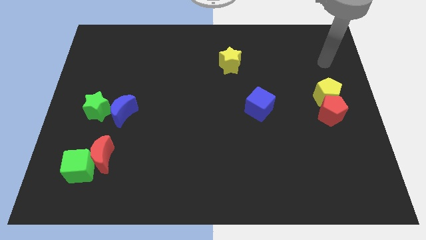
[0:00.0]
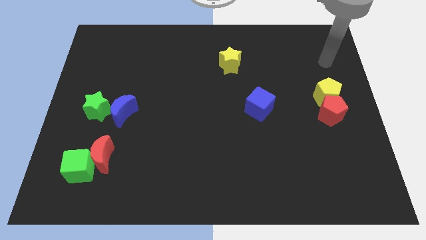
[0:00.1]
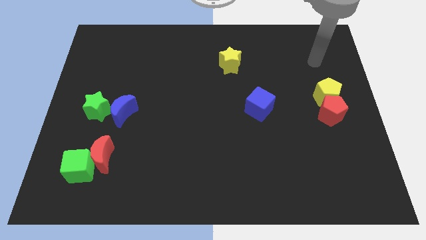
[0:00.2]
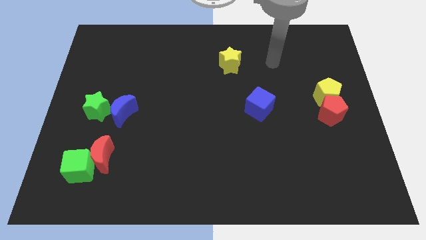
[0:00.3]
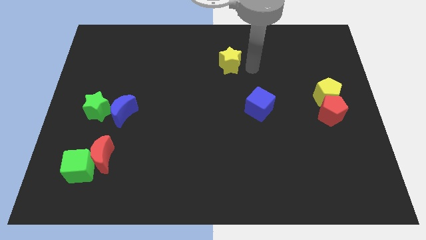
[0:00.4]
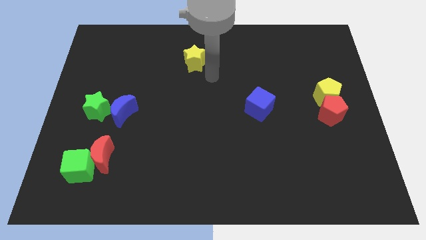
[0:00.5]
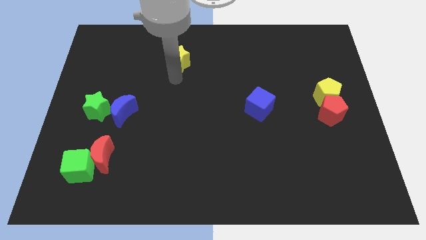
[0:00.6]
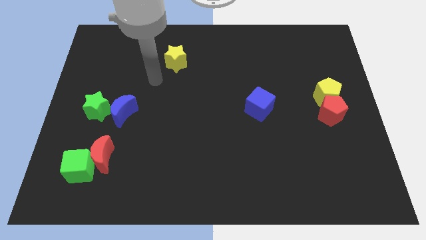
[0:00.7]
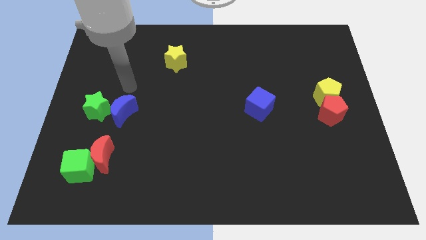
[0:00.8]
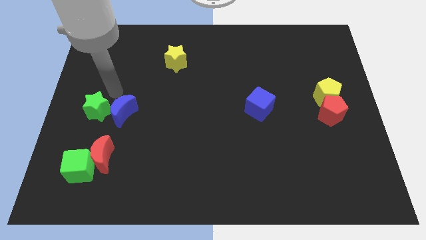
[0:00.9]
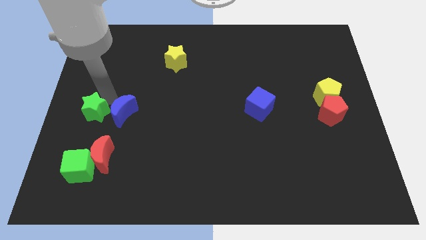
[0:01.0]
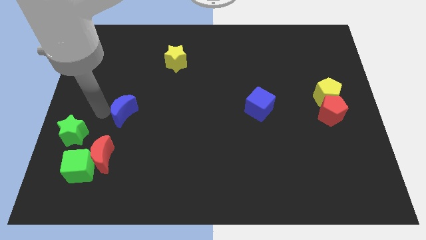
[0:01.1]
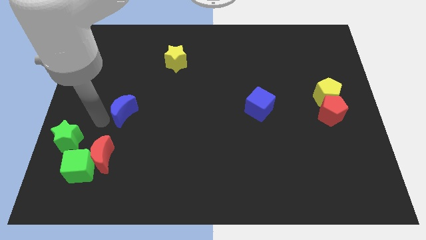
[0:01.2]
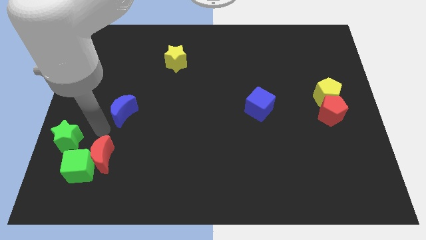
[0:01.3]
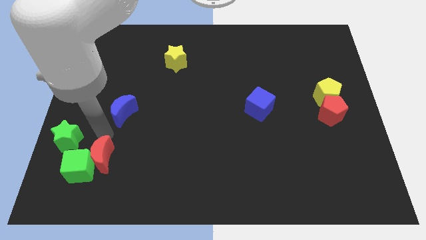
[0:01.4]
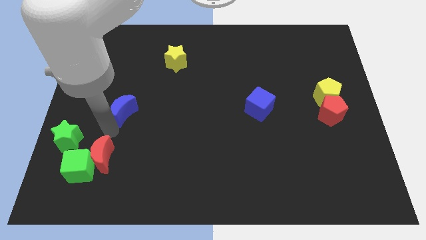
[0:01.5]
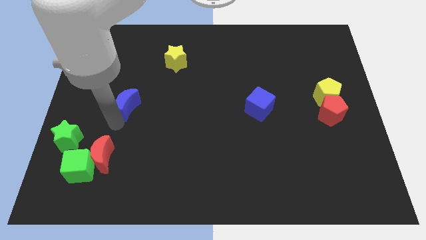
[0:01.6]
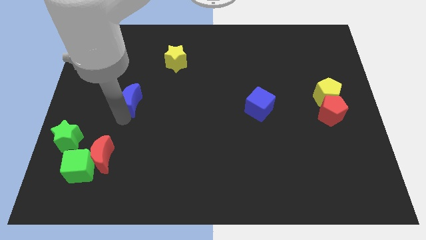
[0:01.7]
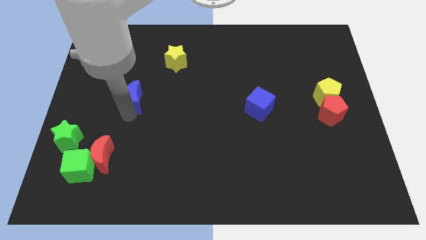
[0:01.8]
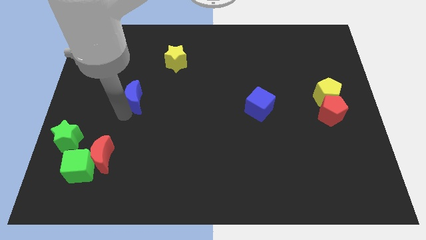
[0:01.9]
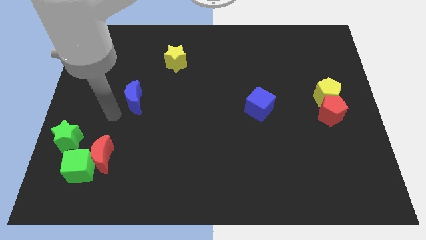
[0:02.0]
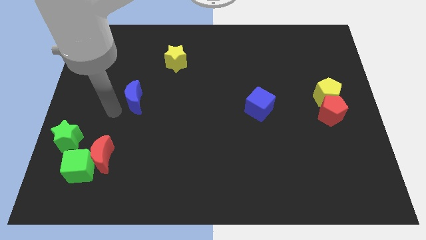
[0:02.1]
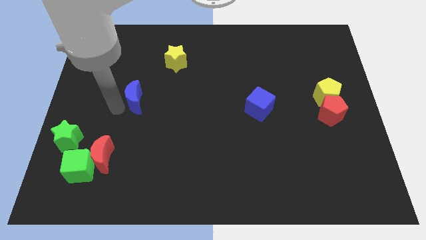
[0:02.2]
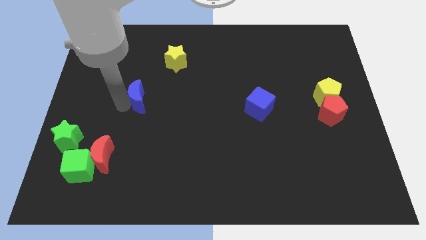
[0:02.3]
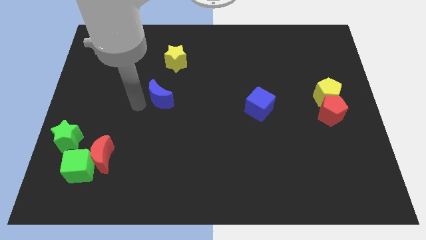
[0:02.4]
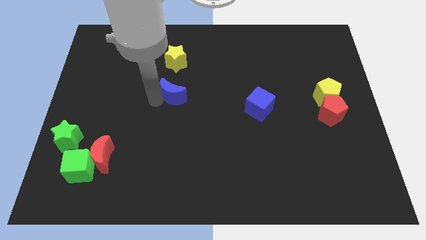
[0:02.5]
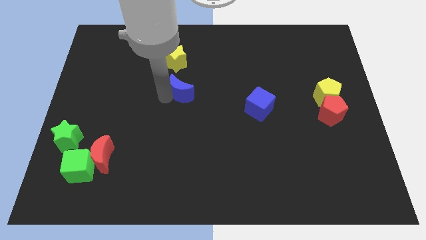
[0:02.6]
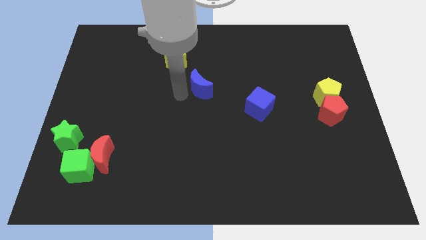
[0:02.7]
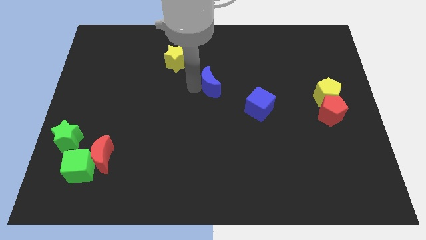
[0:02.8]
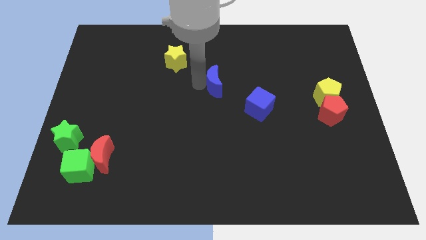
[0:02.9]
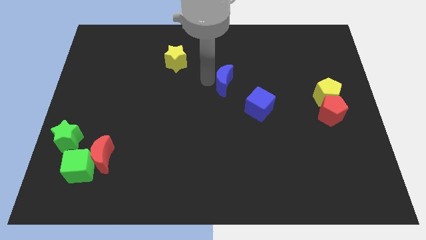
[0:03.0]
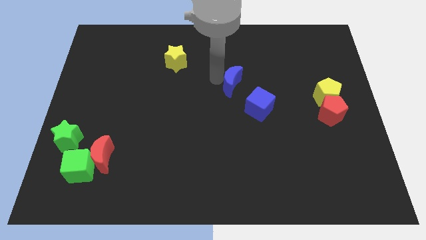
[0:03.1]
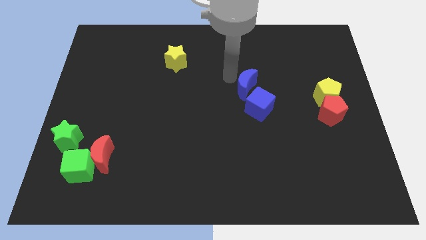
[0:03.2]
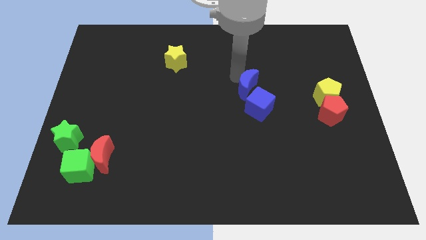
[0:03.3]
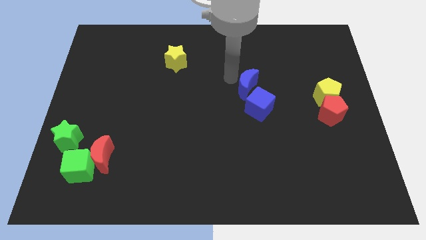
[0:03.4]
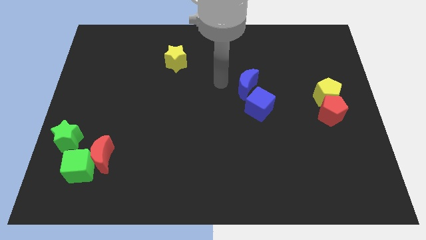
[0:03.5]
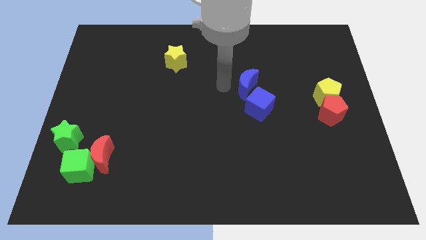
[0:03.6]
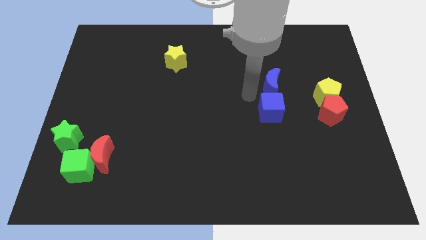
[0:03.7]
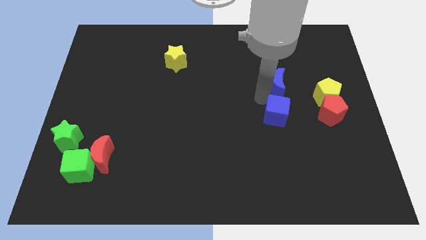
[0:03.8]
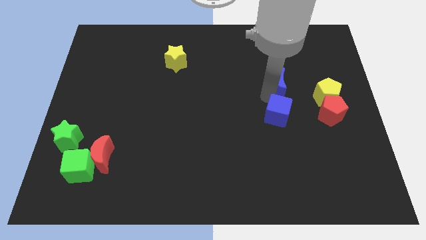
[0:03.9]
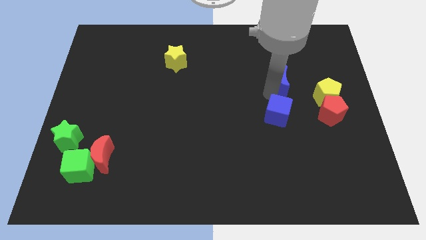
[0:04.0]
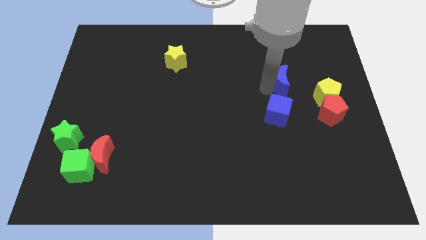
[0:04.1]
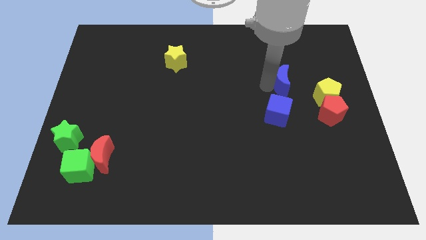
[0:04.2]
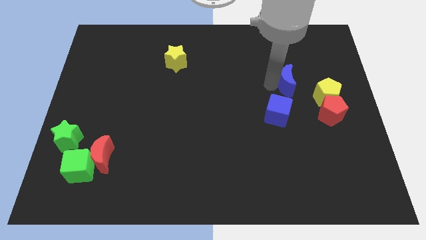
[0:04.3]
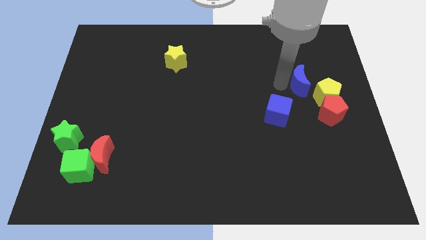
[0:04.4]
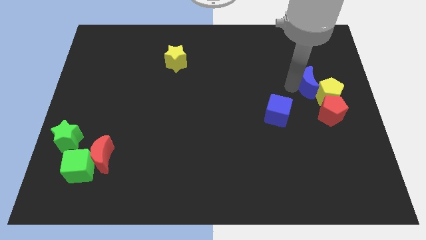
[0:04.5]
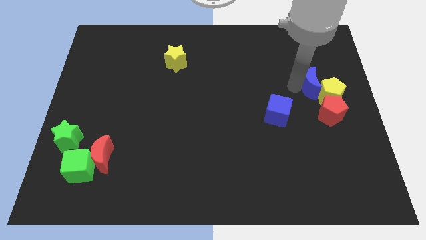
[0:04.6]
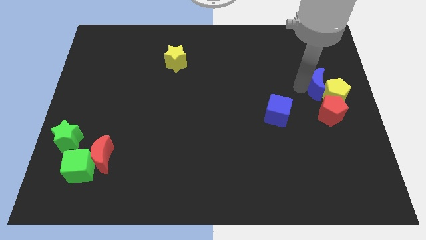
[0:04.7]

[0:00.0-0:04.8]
push the blue moon next to the yellow pentagon

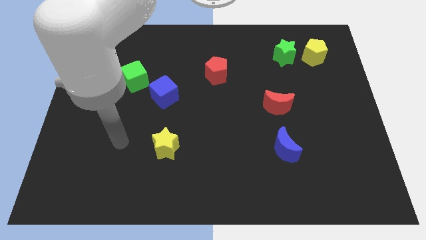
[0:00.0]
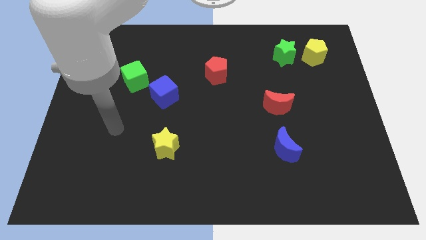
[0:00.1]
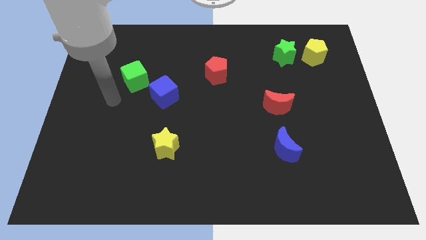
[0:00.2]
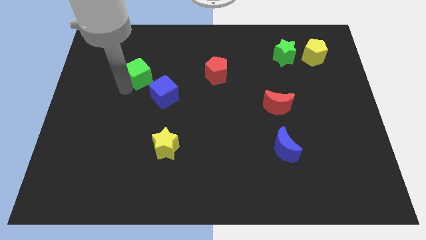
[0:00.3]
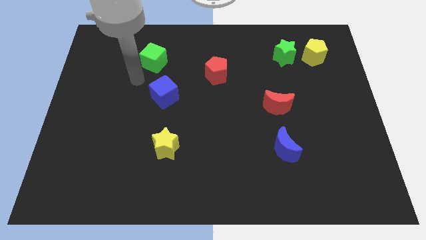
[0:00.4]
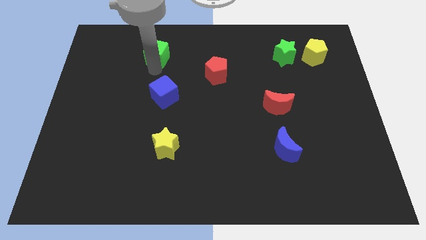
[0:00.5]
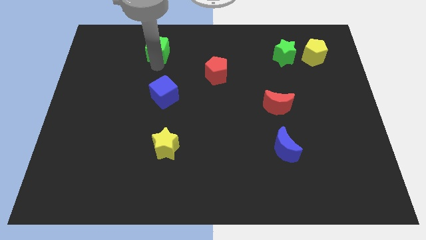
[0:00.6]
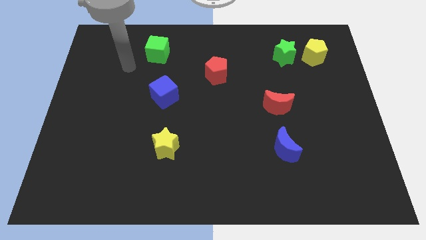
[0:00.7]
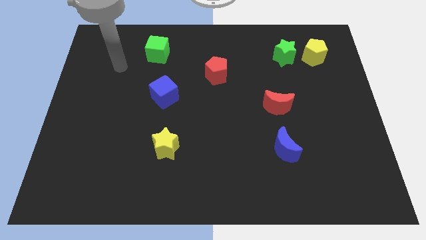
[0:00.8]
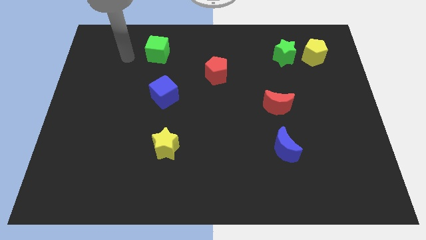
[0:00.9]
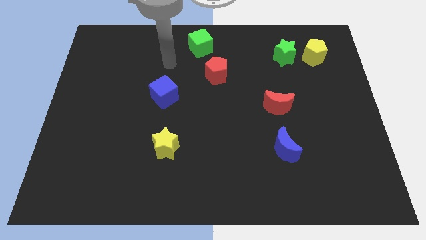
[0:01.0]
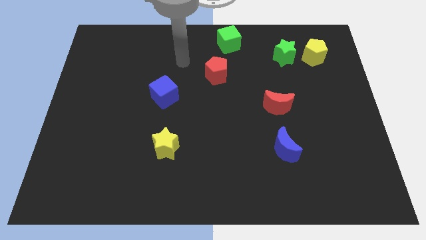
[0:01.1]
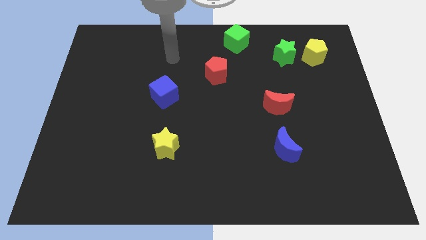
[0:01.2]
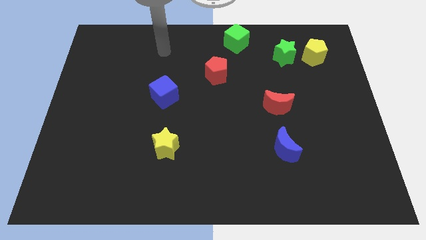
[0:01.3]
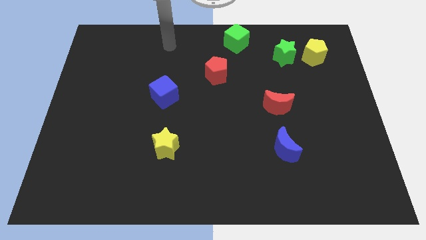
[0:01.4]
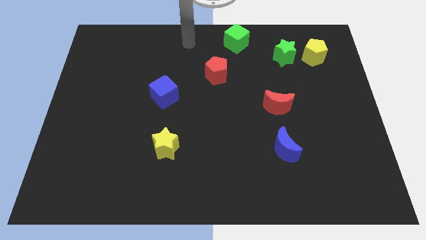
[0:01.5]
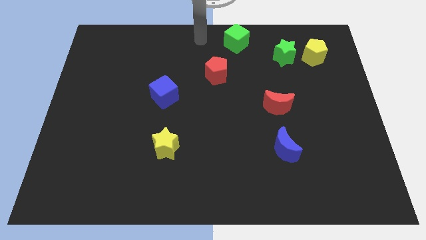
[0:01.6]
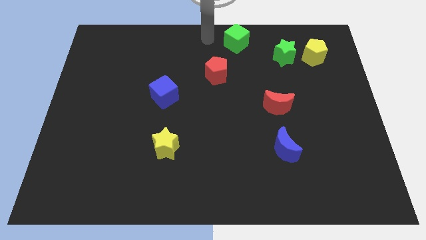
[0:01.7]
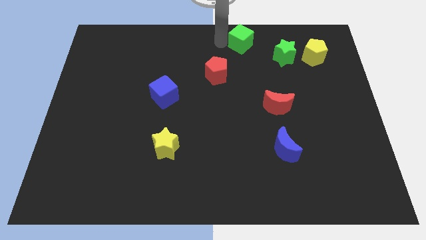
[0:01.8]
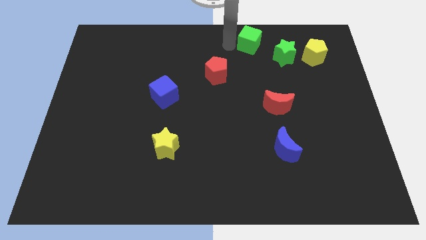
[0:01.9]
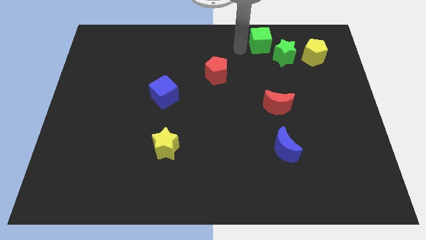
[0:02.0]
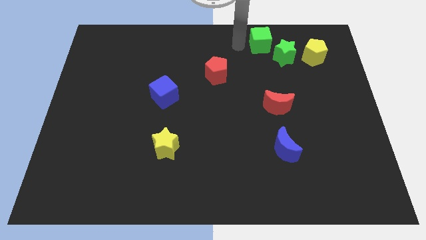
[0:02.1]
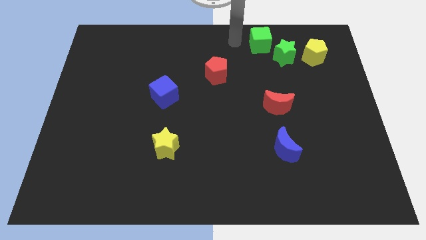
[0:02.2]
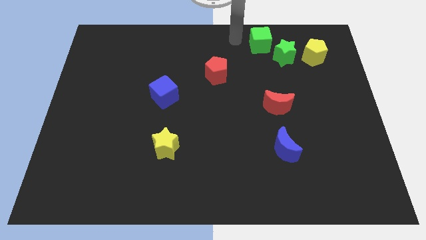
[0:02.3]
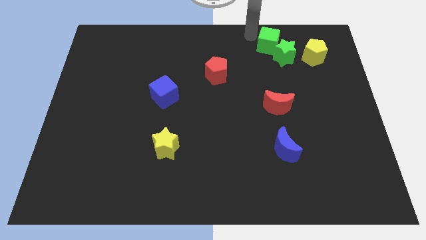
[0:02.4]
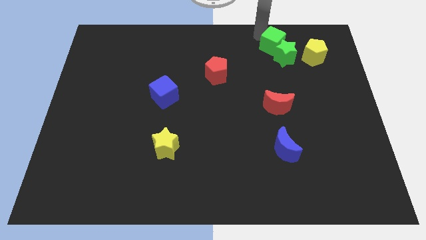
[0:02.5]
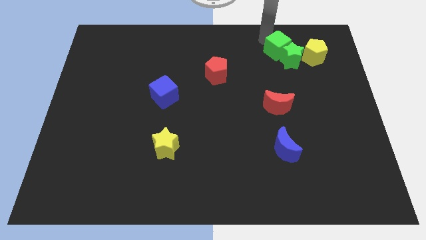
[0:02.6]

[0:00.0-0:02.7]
move the green cube close to the green star

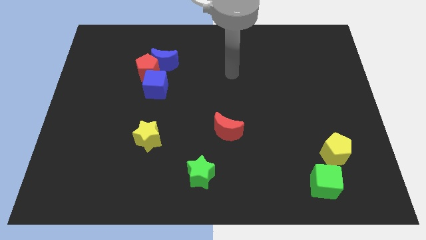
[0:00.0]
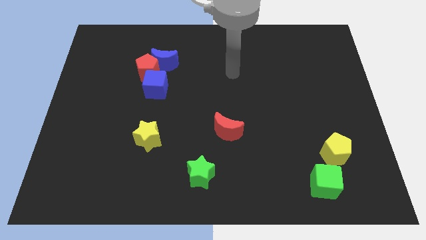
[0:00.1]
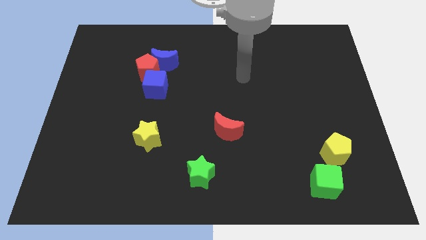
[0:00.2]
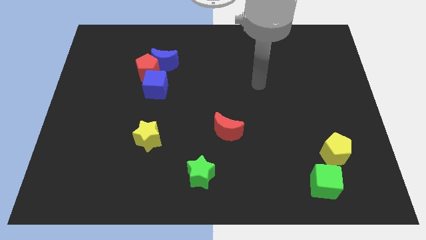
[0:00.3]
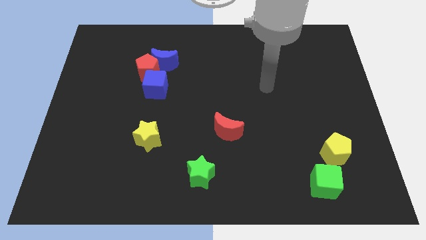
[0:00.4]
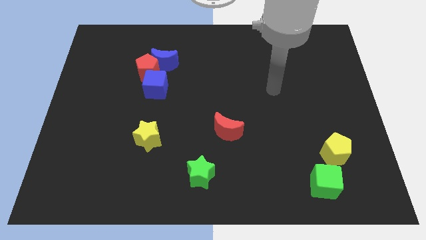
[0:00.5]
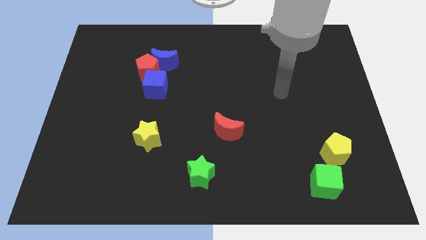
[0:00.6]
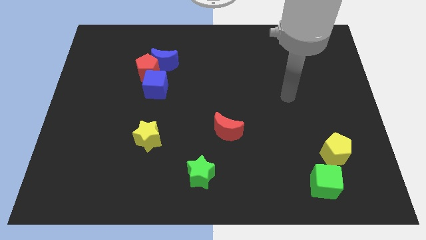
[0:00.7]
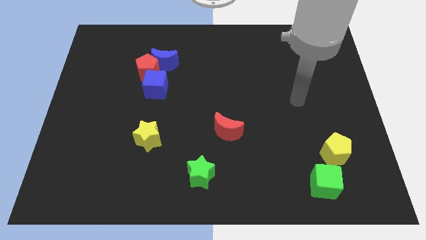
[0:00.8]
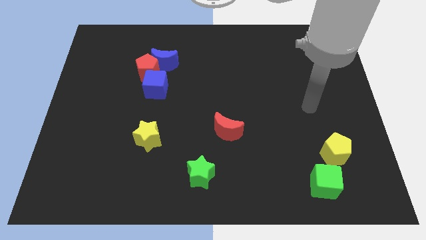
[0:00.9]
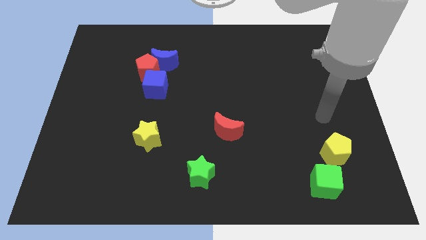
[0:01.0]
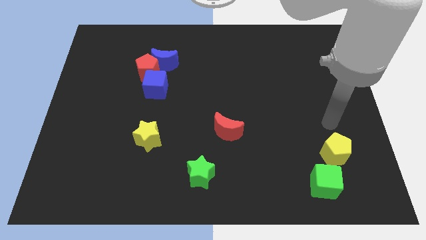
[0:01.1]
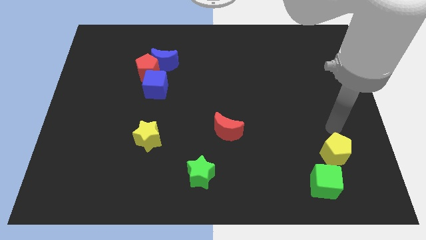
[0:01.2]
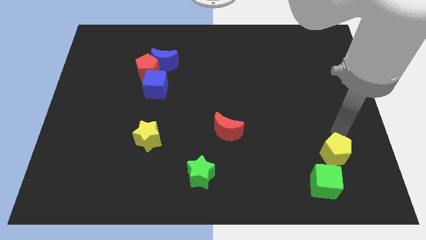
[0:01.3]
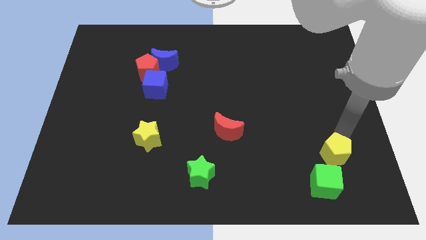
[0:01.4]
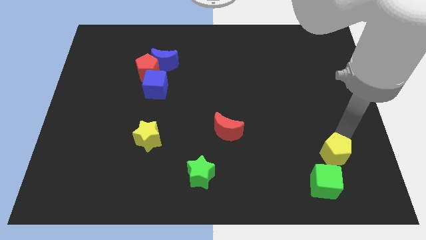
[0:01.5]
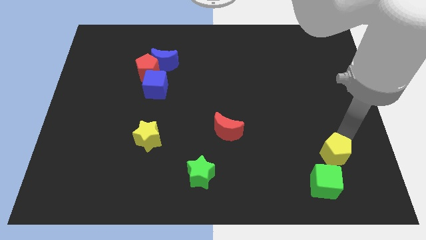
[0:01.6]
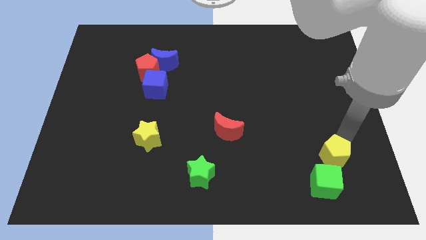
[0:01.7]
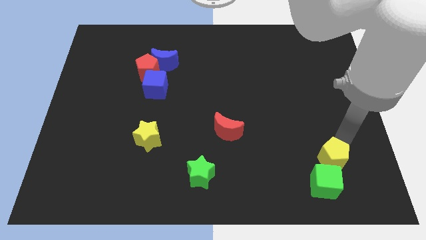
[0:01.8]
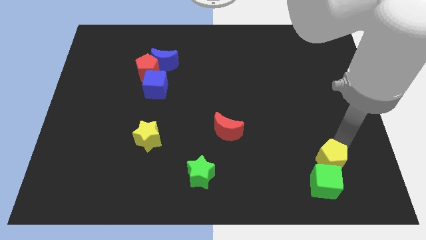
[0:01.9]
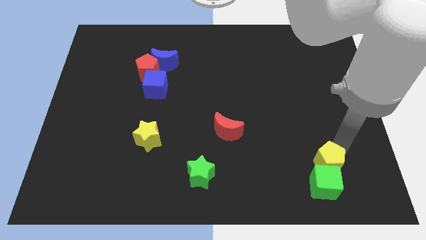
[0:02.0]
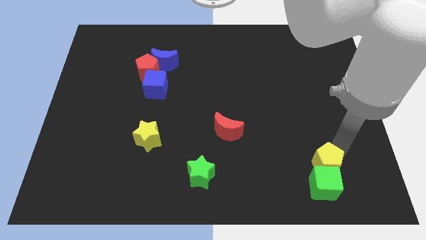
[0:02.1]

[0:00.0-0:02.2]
slide the yellow pentagon next to the green cube
